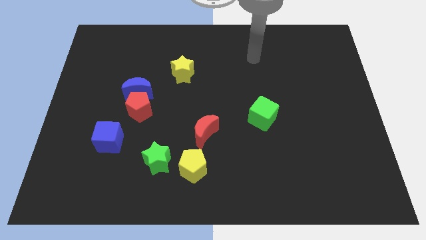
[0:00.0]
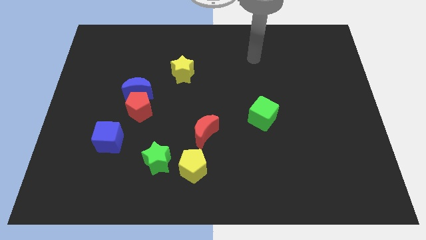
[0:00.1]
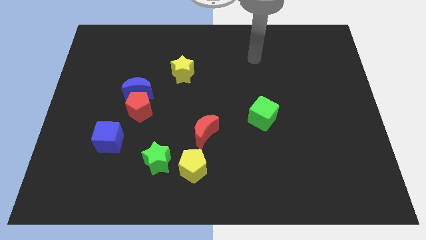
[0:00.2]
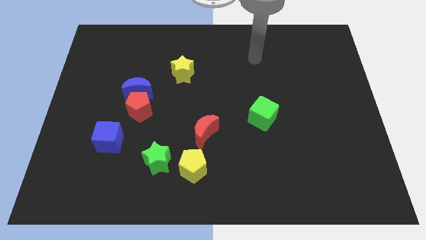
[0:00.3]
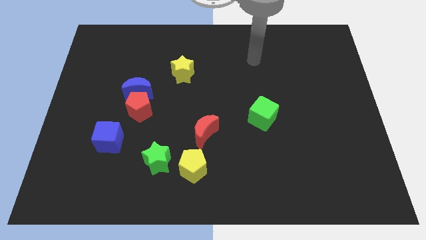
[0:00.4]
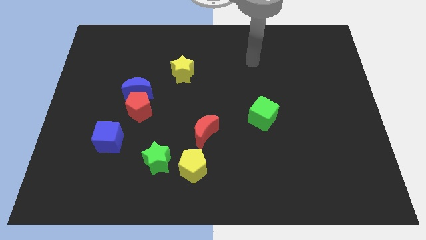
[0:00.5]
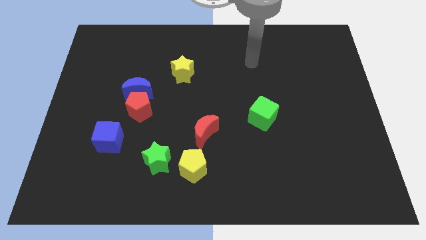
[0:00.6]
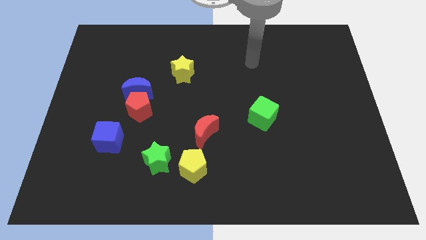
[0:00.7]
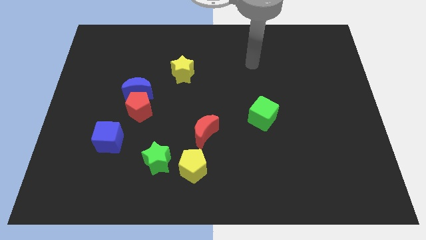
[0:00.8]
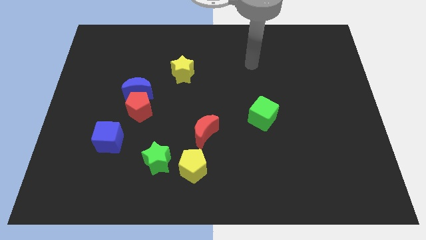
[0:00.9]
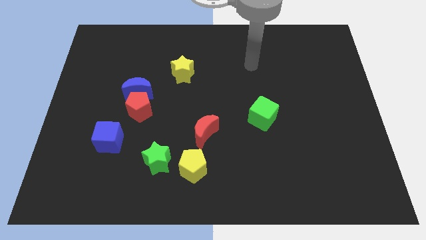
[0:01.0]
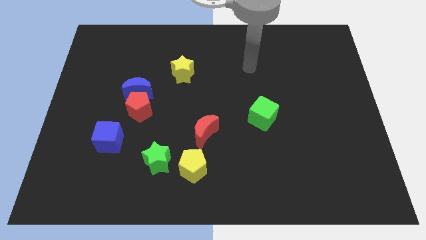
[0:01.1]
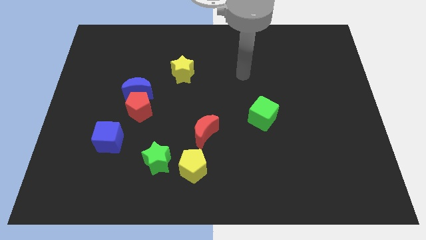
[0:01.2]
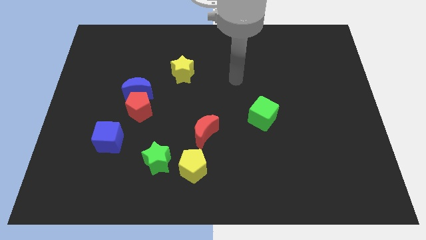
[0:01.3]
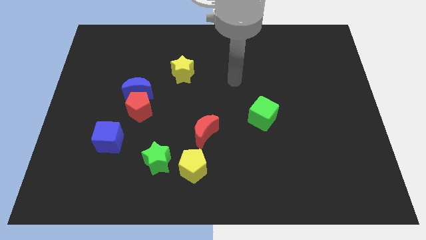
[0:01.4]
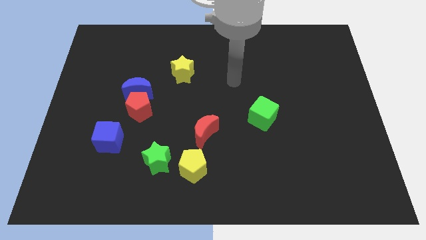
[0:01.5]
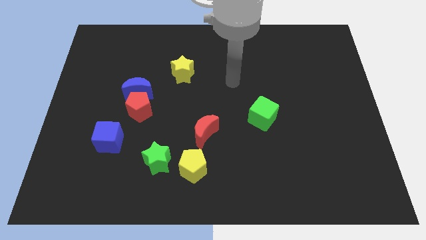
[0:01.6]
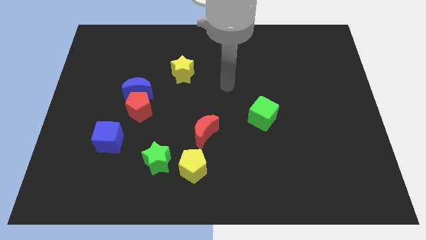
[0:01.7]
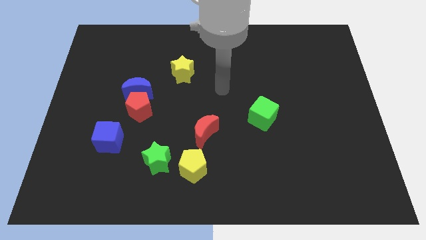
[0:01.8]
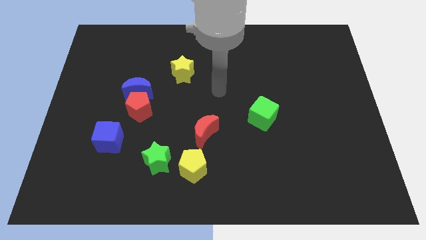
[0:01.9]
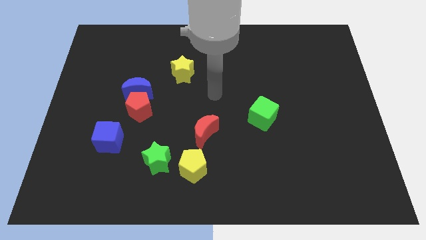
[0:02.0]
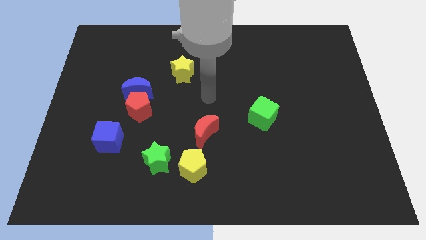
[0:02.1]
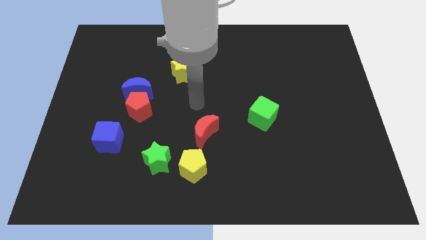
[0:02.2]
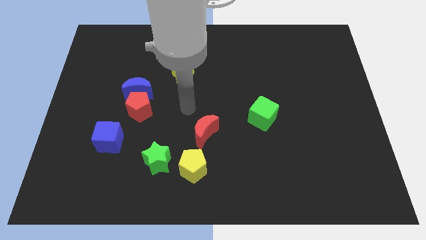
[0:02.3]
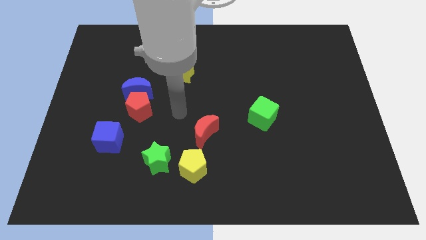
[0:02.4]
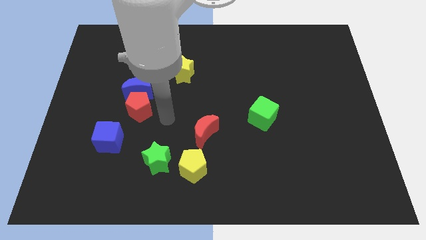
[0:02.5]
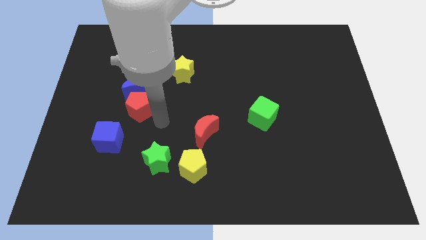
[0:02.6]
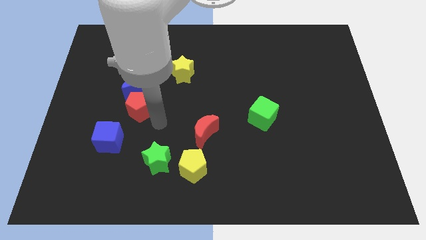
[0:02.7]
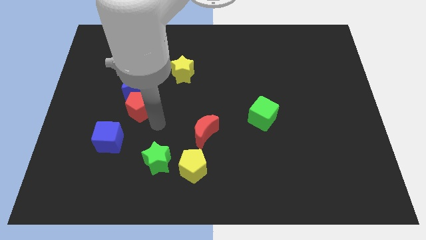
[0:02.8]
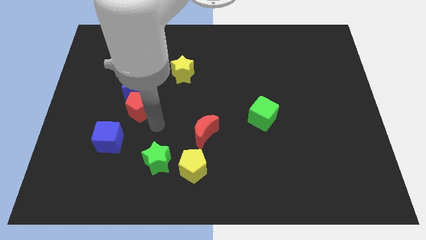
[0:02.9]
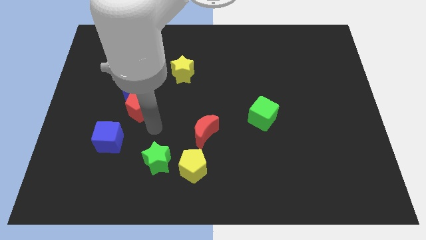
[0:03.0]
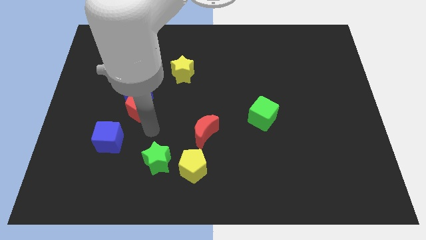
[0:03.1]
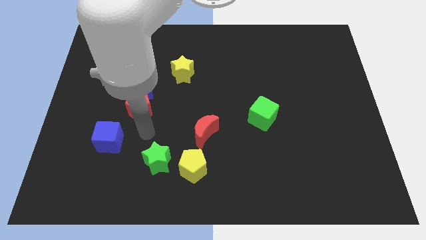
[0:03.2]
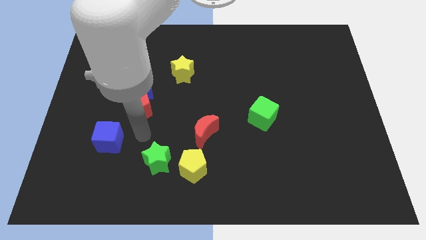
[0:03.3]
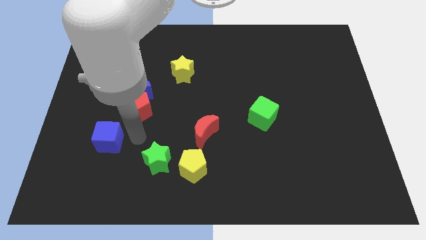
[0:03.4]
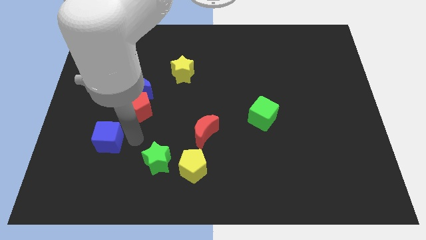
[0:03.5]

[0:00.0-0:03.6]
point the arm at the bottom of the red pentagon

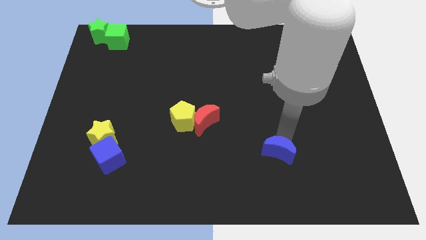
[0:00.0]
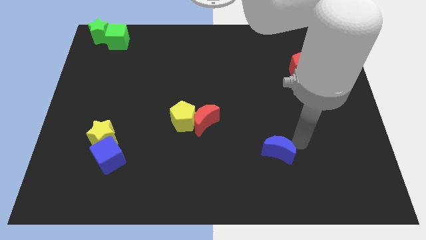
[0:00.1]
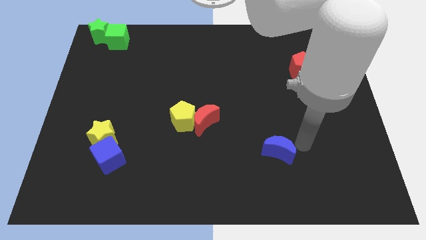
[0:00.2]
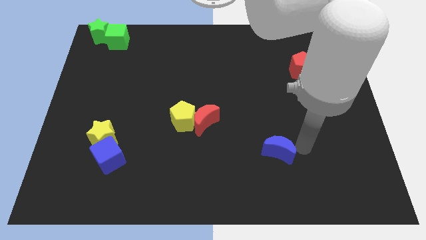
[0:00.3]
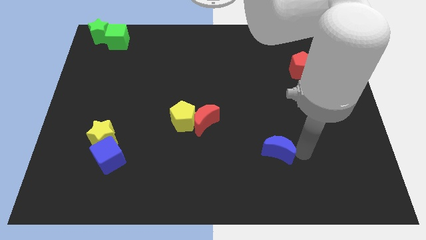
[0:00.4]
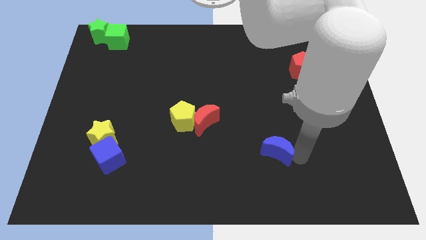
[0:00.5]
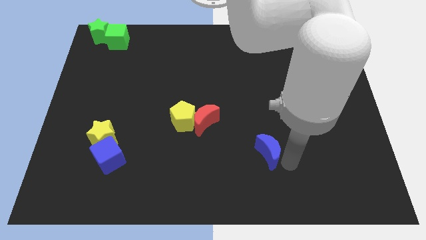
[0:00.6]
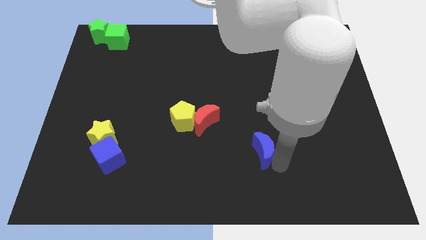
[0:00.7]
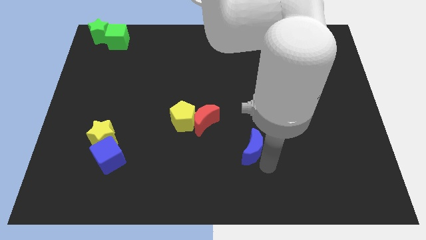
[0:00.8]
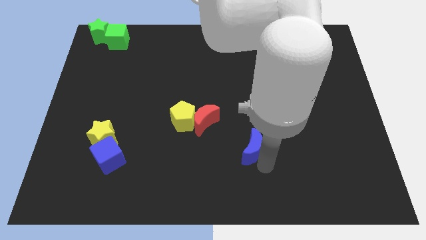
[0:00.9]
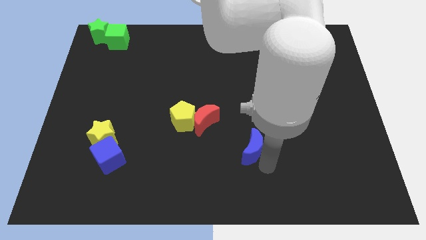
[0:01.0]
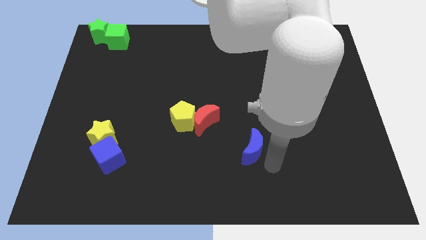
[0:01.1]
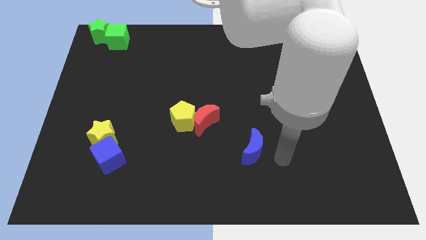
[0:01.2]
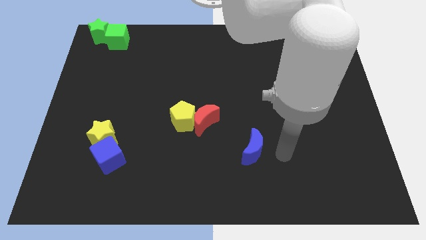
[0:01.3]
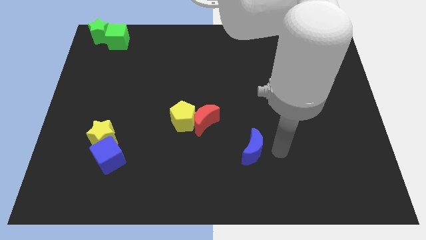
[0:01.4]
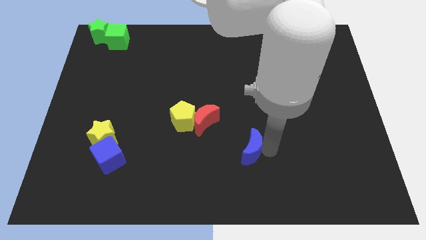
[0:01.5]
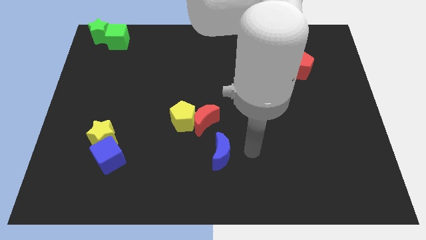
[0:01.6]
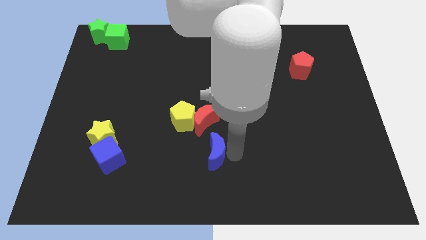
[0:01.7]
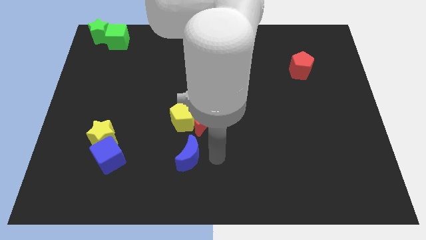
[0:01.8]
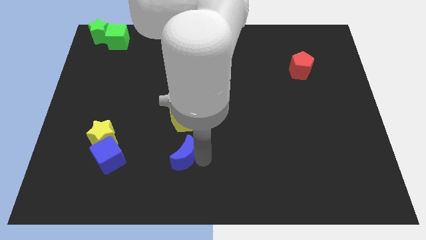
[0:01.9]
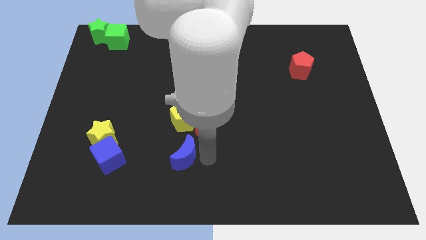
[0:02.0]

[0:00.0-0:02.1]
slide the blue crescent at the bottom of the yellow pentagon

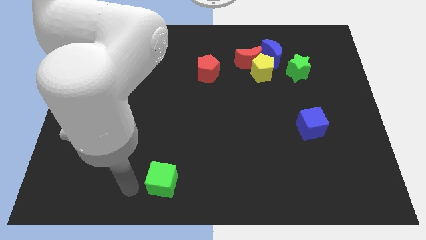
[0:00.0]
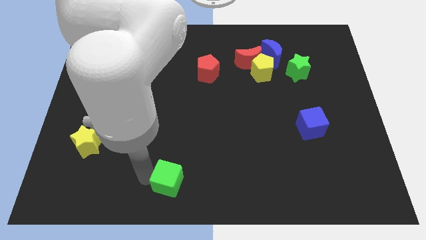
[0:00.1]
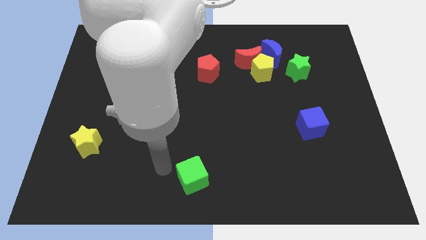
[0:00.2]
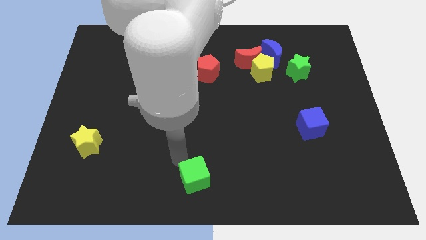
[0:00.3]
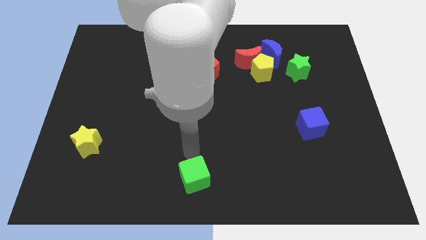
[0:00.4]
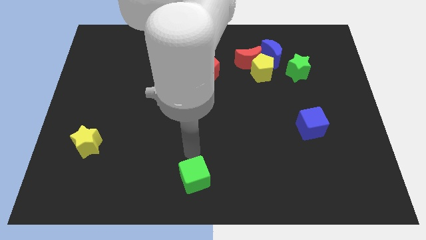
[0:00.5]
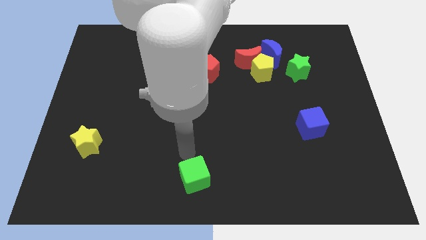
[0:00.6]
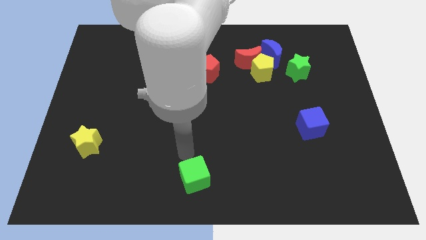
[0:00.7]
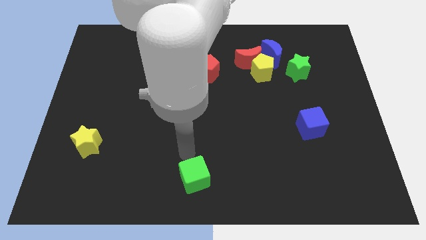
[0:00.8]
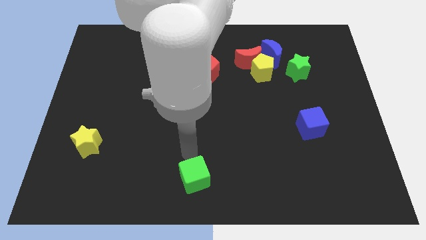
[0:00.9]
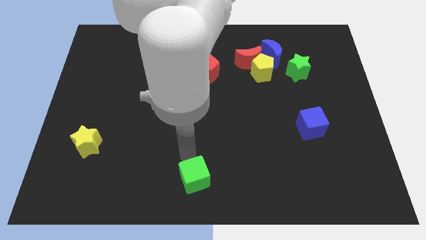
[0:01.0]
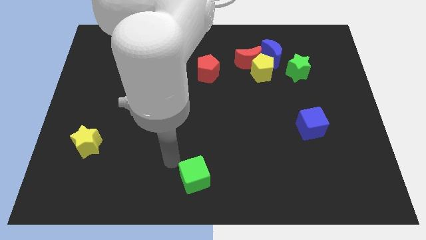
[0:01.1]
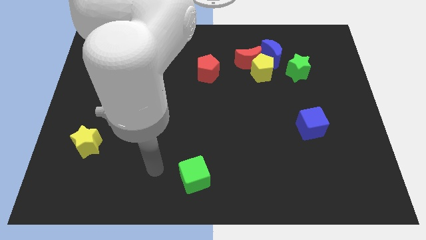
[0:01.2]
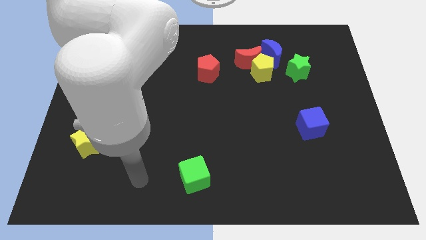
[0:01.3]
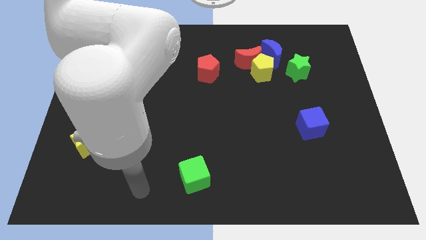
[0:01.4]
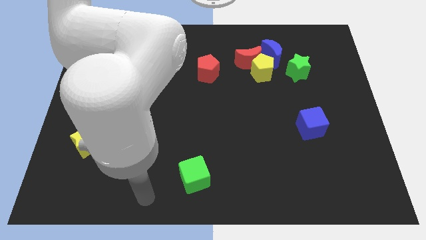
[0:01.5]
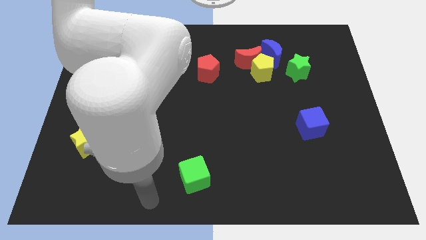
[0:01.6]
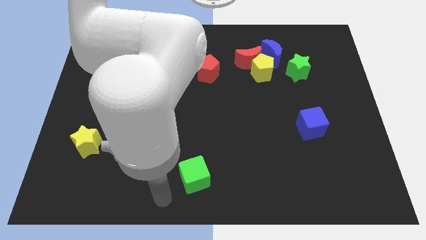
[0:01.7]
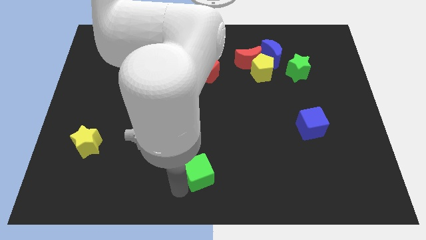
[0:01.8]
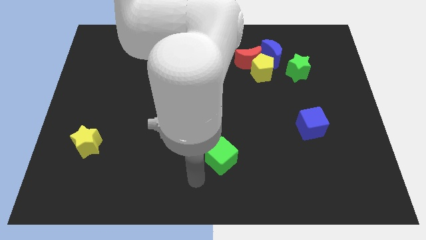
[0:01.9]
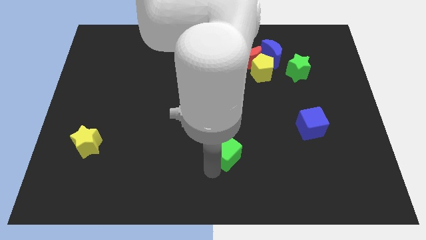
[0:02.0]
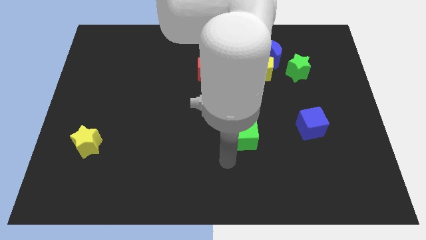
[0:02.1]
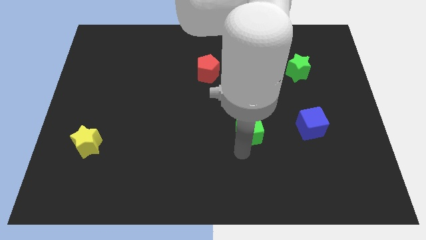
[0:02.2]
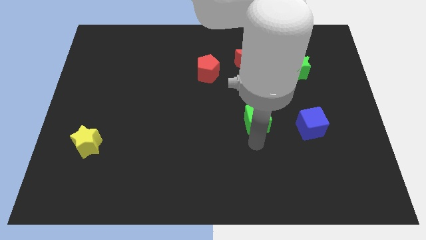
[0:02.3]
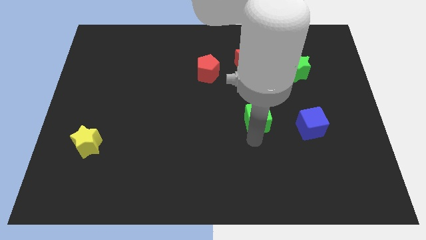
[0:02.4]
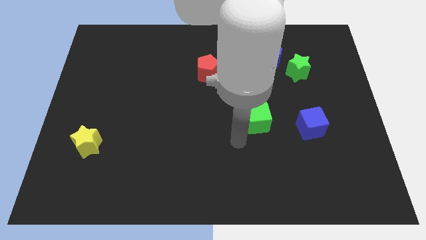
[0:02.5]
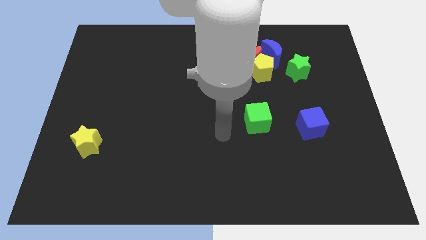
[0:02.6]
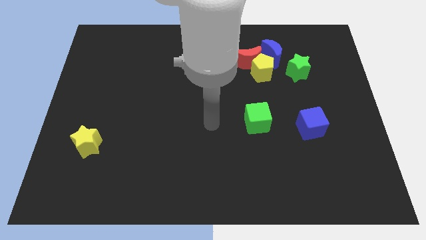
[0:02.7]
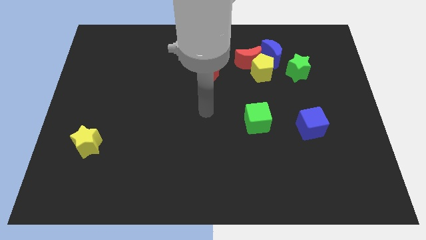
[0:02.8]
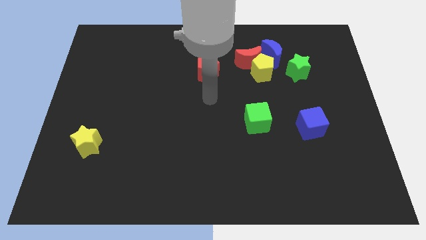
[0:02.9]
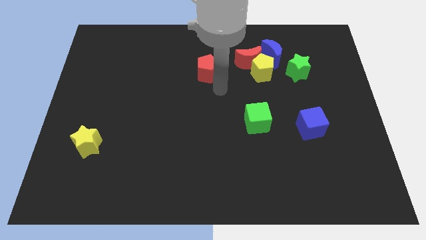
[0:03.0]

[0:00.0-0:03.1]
move the green cube parallel to the blue cube
